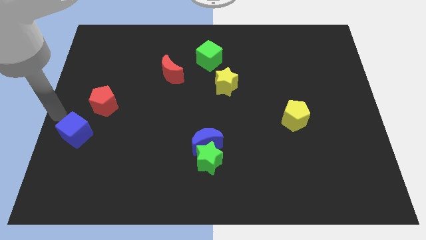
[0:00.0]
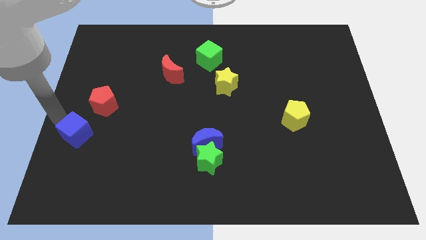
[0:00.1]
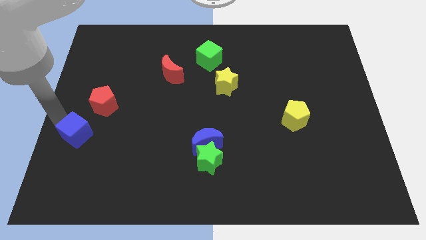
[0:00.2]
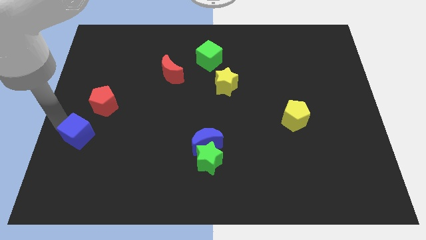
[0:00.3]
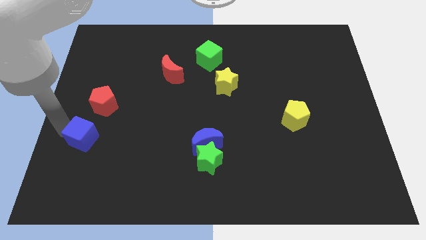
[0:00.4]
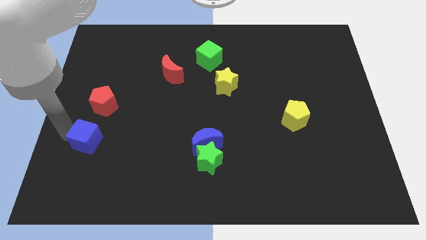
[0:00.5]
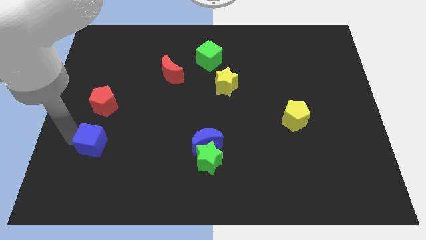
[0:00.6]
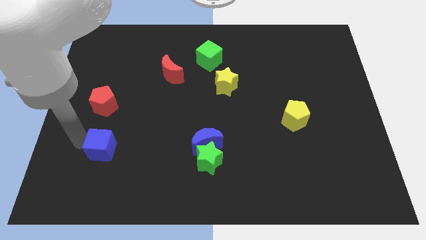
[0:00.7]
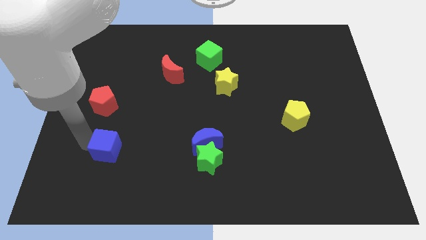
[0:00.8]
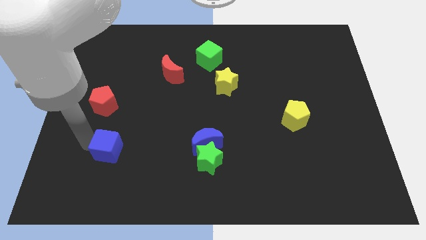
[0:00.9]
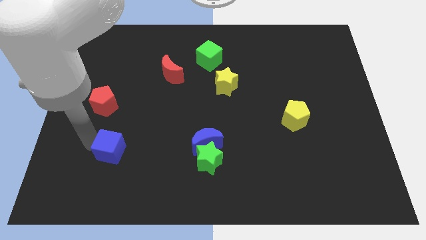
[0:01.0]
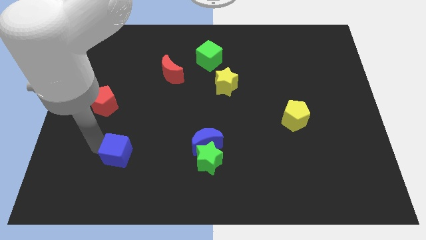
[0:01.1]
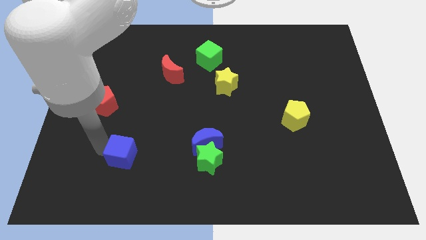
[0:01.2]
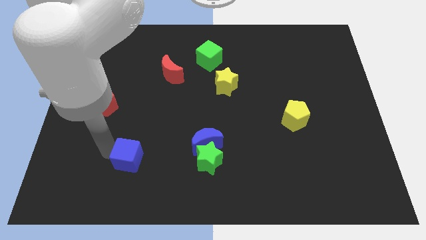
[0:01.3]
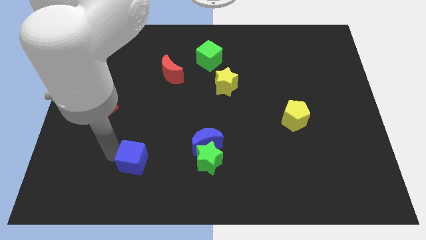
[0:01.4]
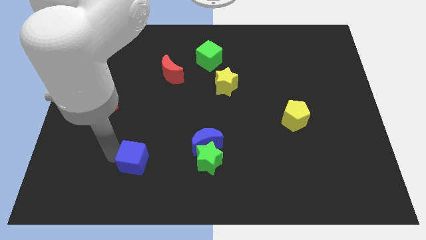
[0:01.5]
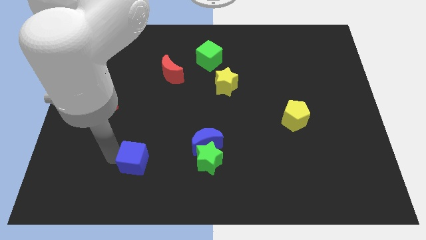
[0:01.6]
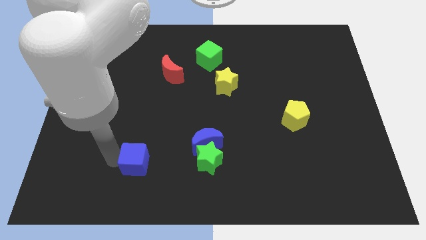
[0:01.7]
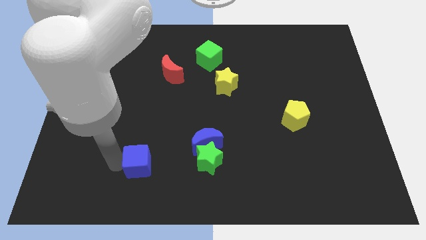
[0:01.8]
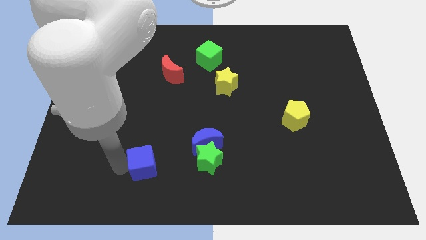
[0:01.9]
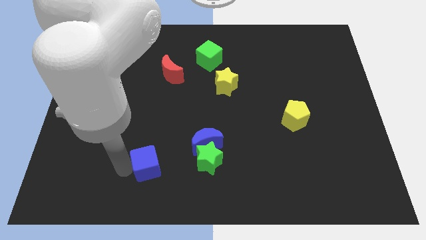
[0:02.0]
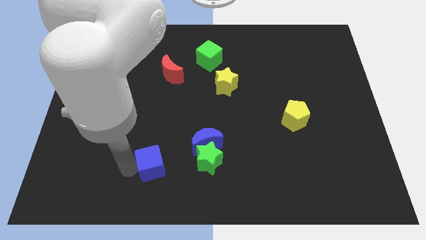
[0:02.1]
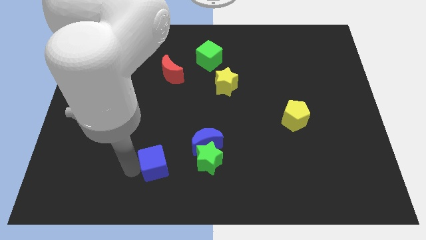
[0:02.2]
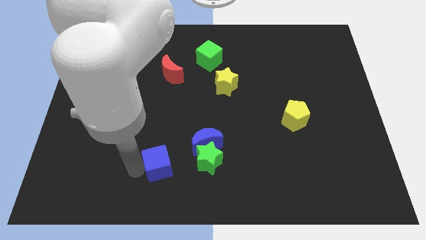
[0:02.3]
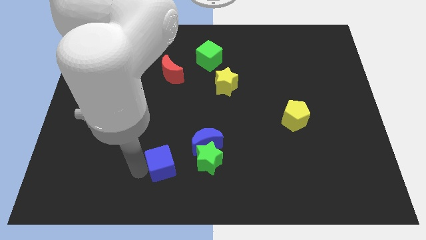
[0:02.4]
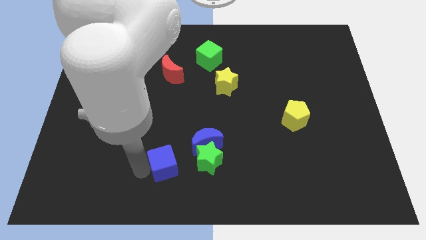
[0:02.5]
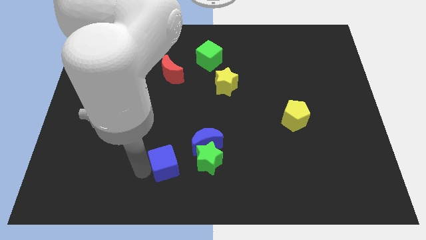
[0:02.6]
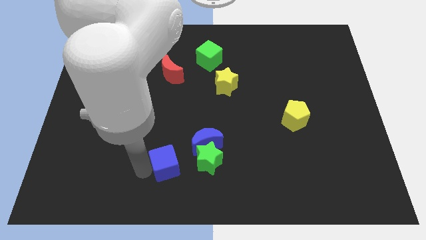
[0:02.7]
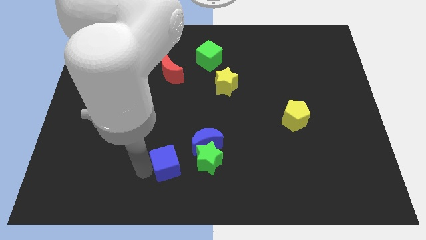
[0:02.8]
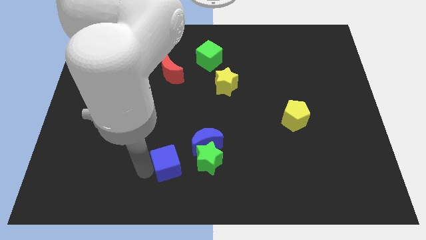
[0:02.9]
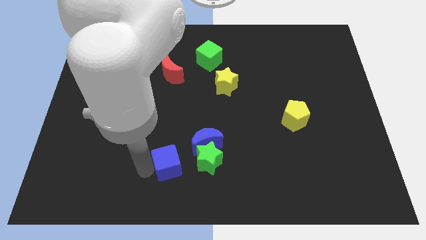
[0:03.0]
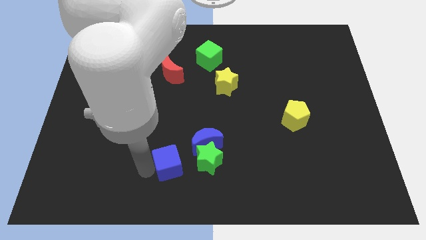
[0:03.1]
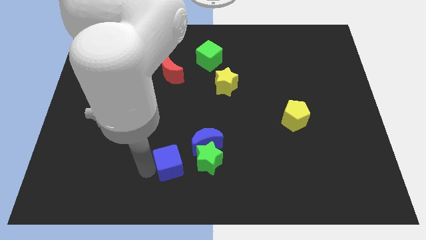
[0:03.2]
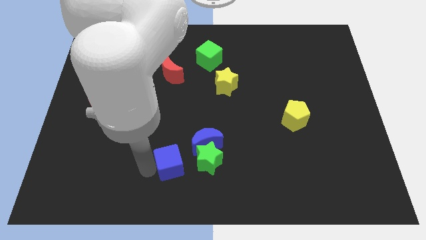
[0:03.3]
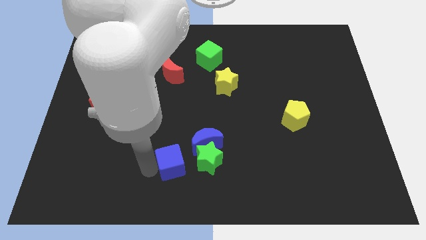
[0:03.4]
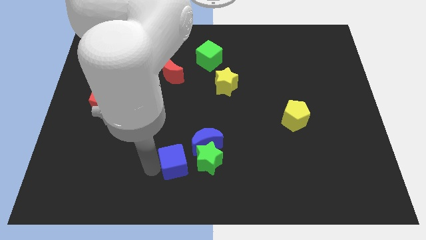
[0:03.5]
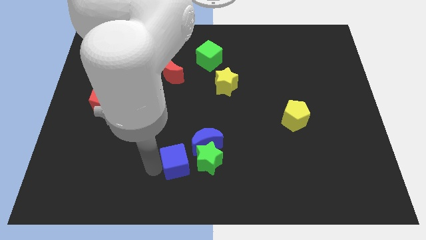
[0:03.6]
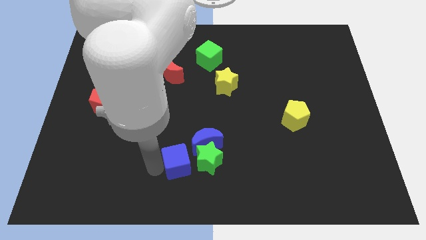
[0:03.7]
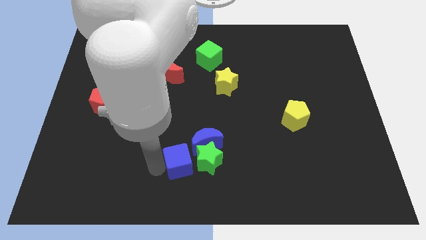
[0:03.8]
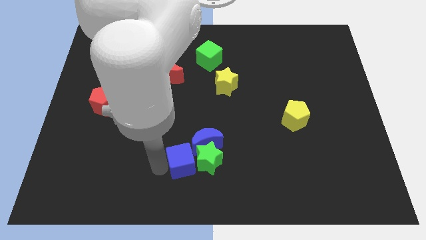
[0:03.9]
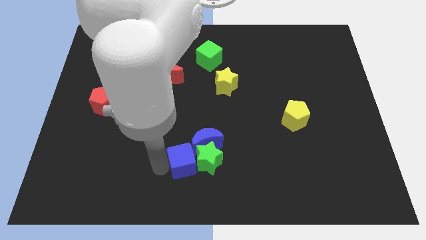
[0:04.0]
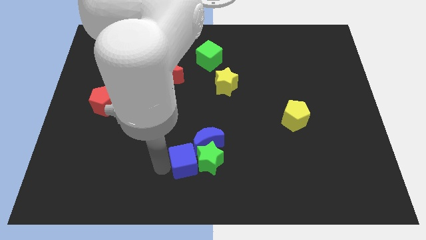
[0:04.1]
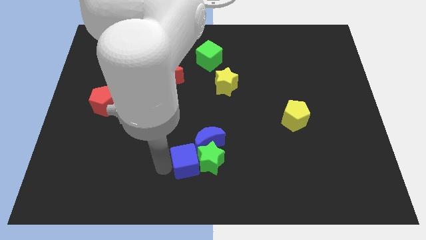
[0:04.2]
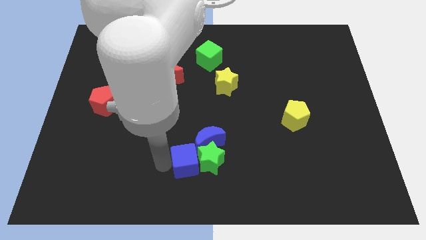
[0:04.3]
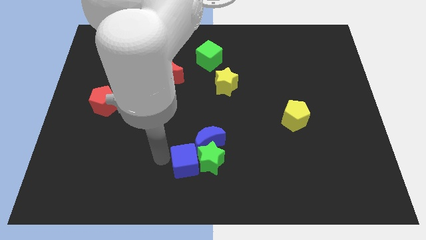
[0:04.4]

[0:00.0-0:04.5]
place the blue cube to the left of the green star

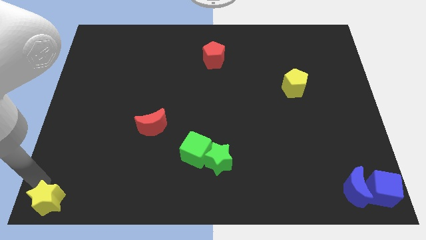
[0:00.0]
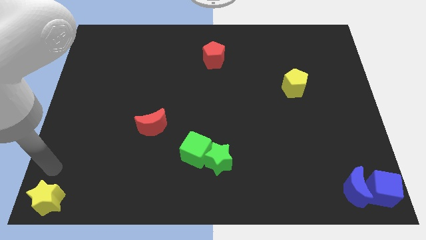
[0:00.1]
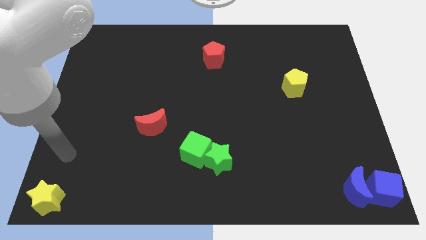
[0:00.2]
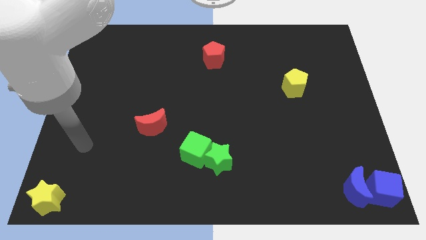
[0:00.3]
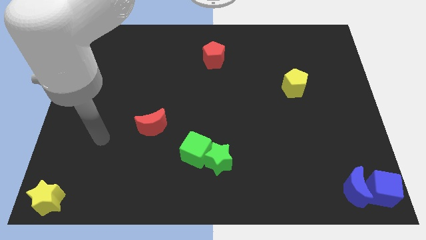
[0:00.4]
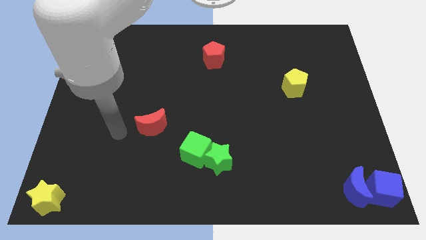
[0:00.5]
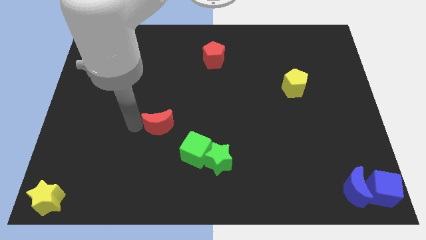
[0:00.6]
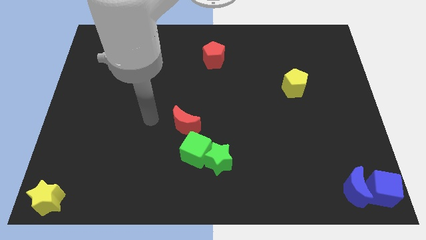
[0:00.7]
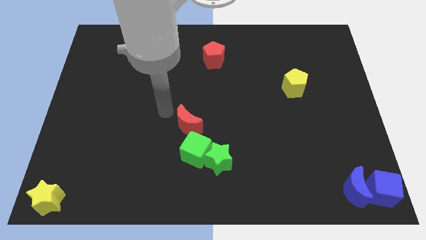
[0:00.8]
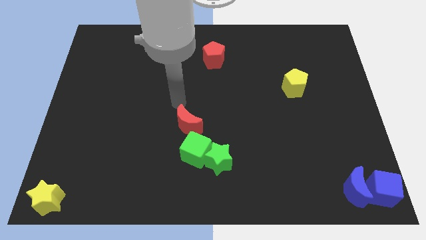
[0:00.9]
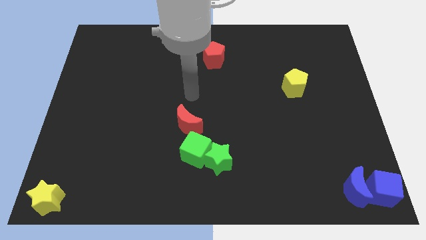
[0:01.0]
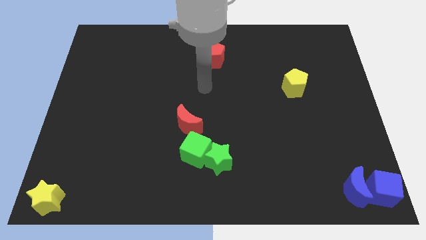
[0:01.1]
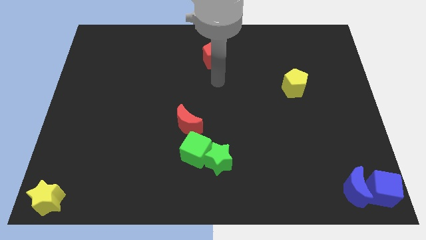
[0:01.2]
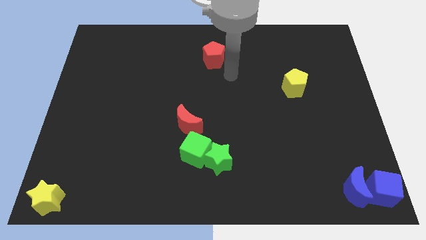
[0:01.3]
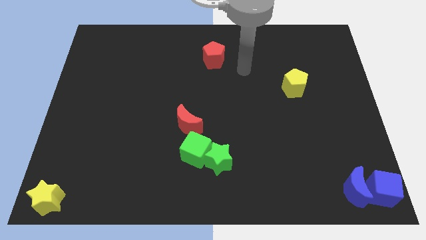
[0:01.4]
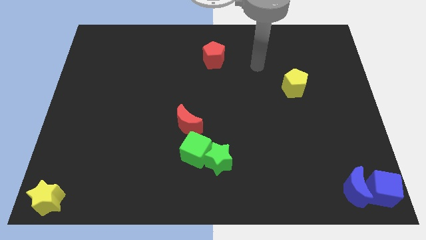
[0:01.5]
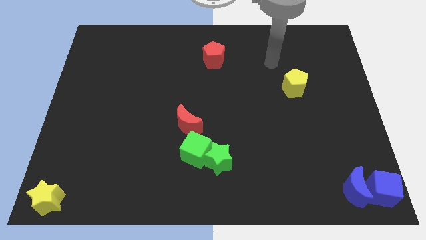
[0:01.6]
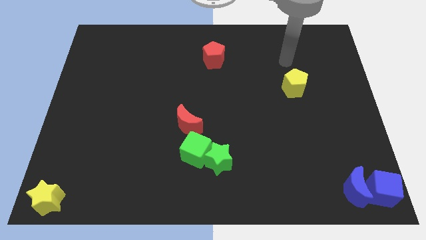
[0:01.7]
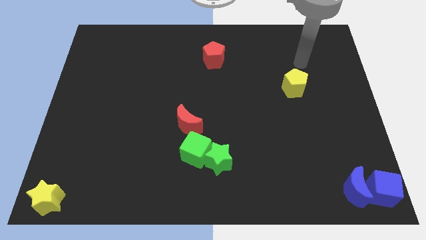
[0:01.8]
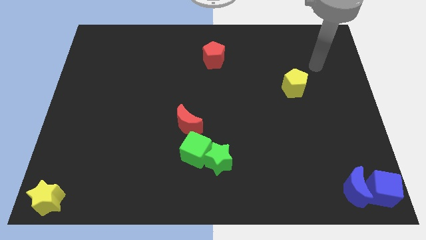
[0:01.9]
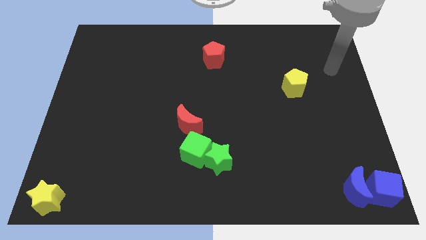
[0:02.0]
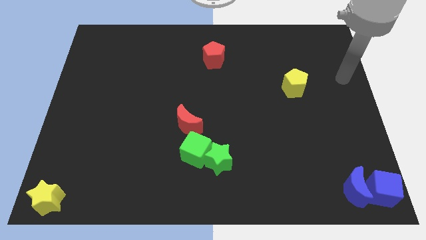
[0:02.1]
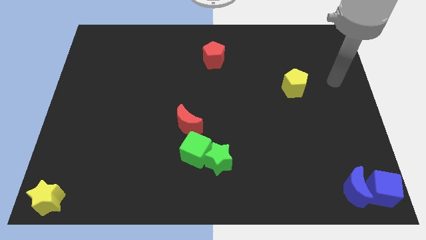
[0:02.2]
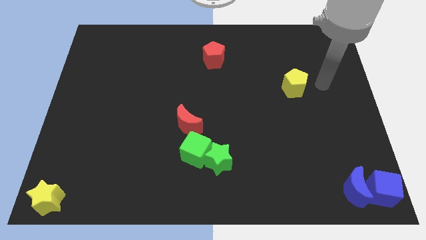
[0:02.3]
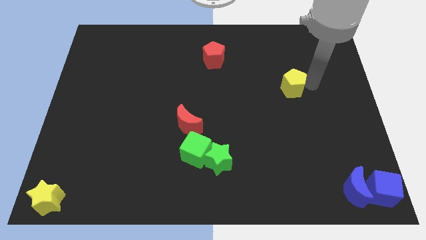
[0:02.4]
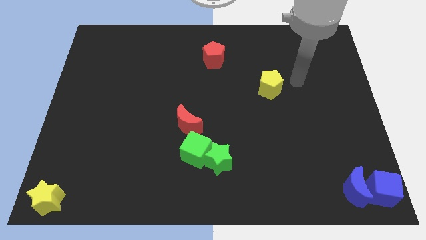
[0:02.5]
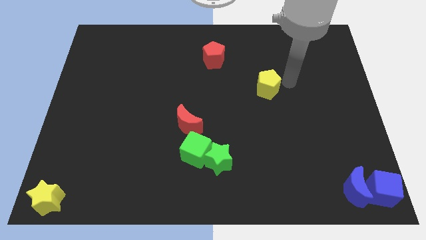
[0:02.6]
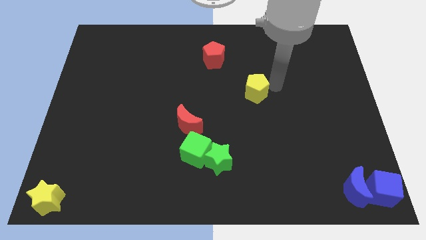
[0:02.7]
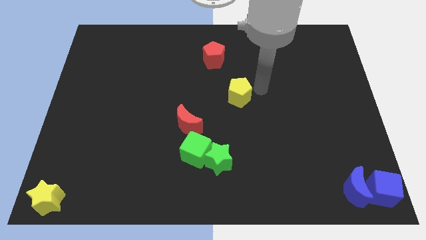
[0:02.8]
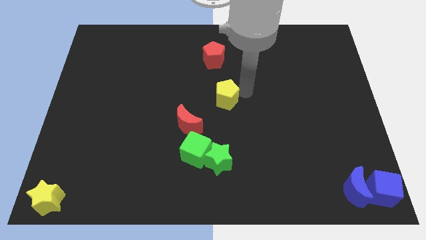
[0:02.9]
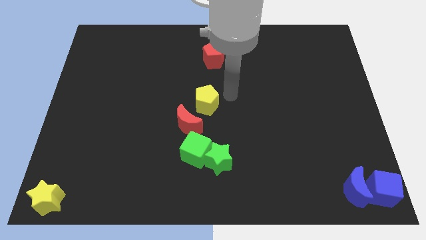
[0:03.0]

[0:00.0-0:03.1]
place yellow pentagon to the center of the board

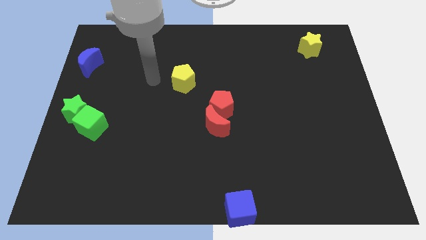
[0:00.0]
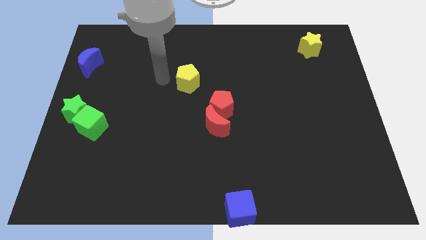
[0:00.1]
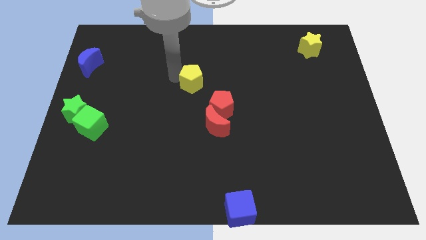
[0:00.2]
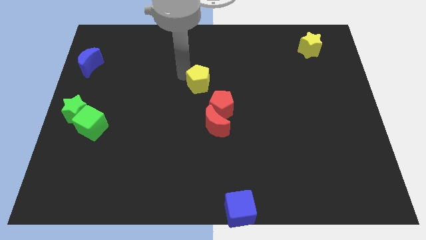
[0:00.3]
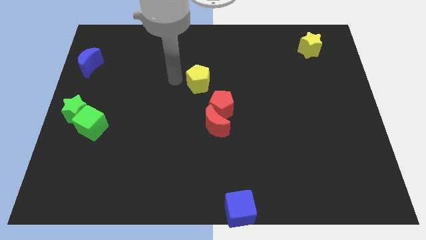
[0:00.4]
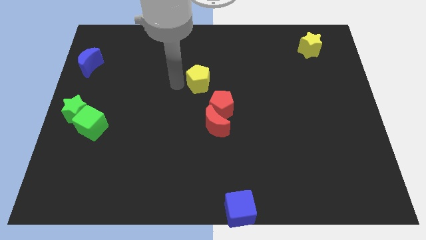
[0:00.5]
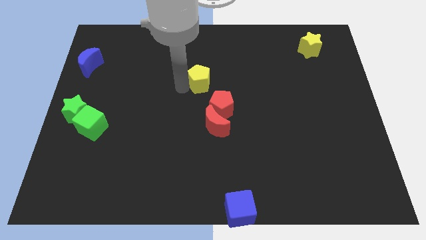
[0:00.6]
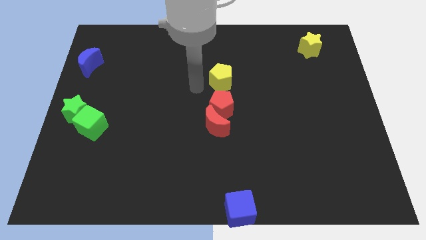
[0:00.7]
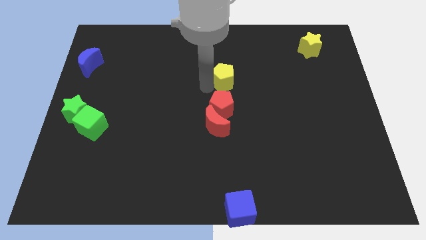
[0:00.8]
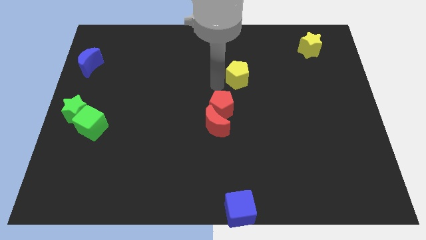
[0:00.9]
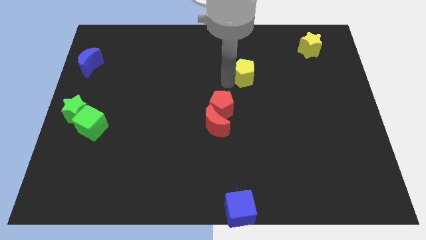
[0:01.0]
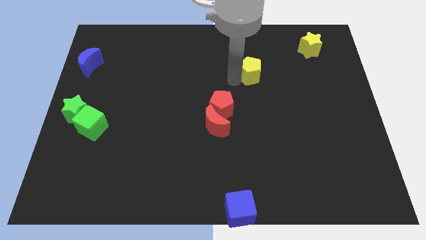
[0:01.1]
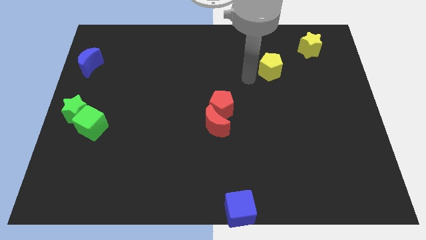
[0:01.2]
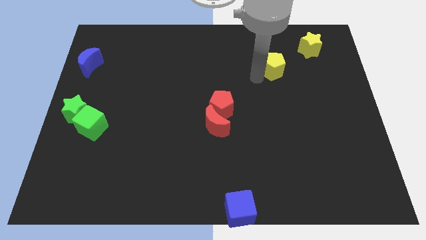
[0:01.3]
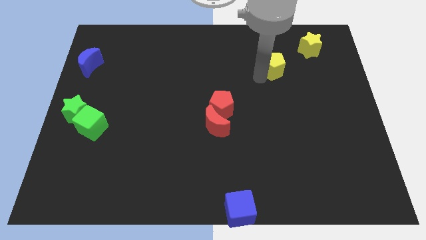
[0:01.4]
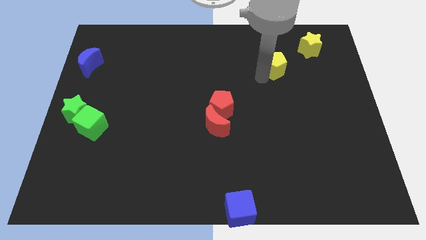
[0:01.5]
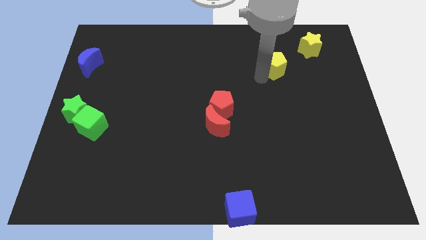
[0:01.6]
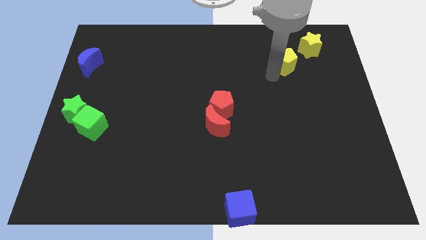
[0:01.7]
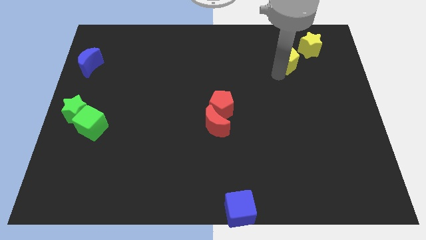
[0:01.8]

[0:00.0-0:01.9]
move the yellow pentagon close to the yellow star
